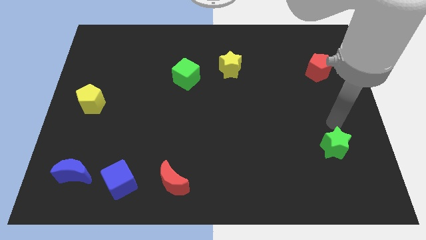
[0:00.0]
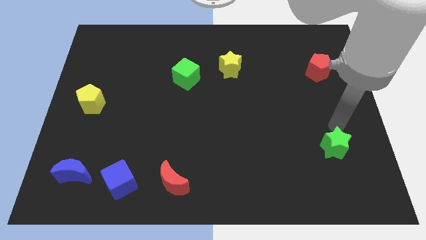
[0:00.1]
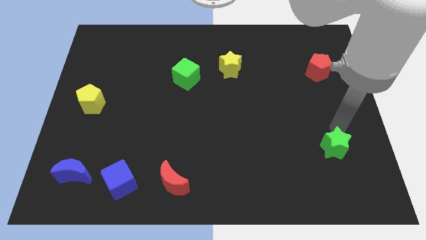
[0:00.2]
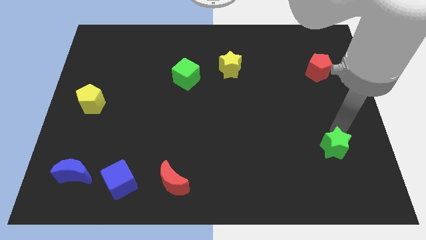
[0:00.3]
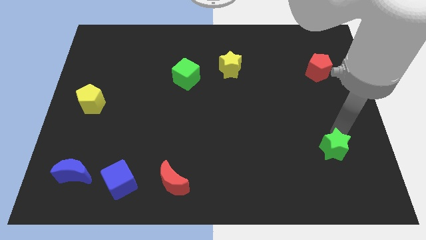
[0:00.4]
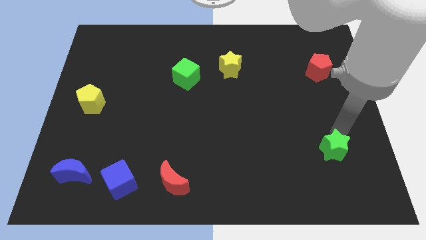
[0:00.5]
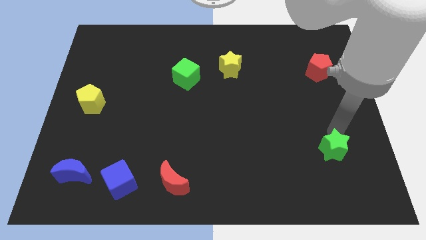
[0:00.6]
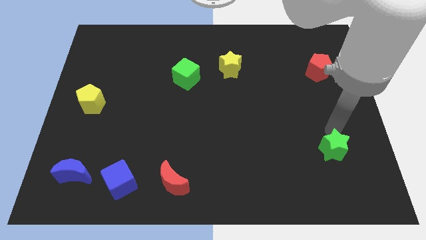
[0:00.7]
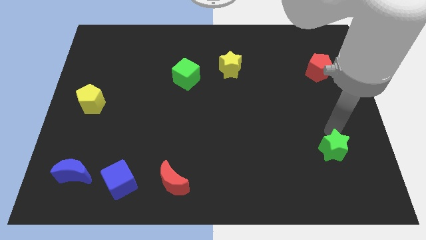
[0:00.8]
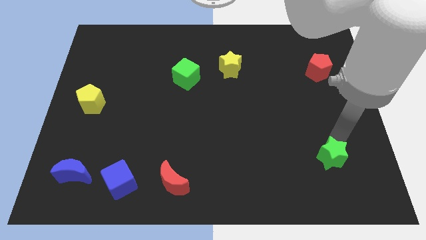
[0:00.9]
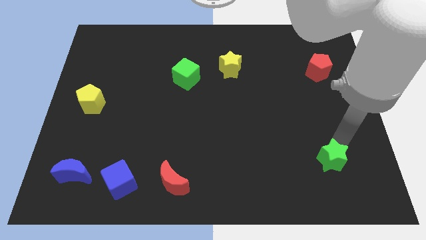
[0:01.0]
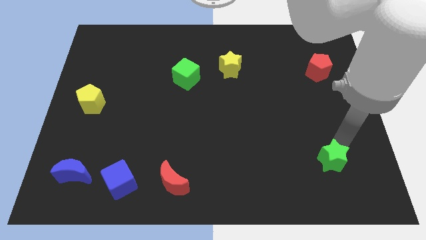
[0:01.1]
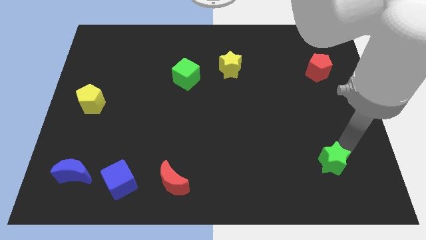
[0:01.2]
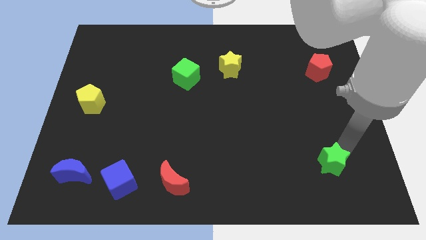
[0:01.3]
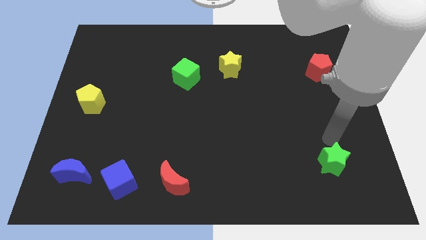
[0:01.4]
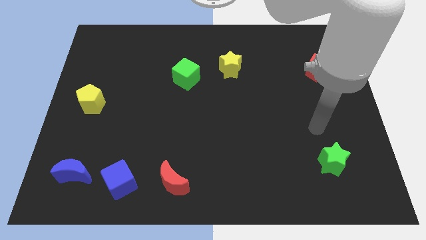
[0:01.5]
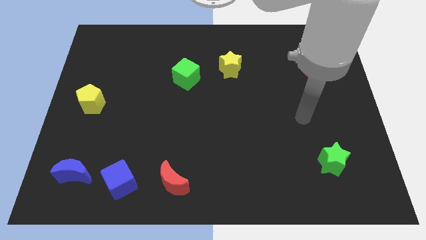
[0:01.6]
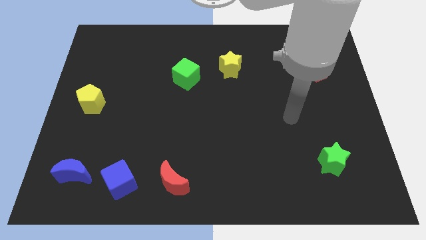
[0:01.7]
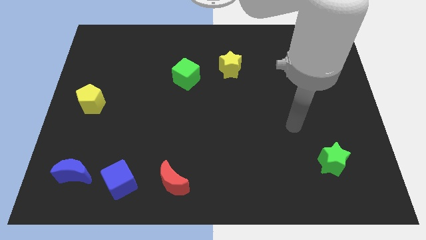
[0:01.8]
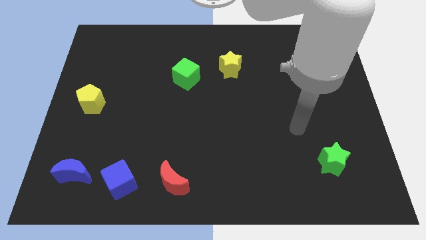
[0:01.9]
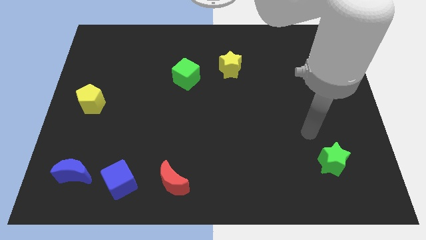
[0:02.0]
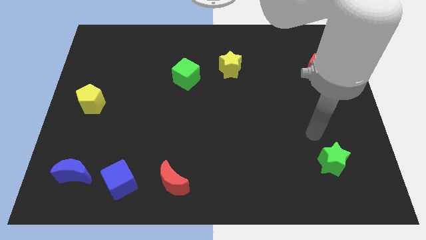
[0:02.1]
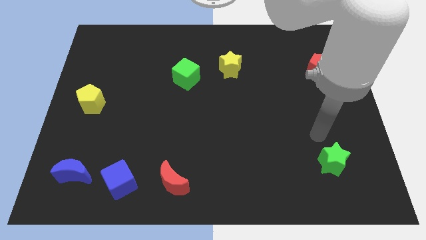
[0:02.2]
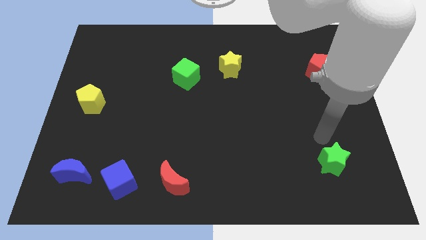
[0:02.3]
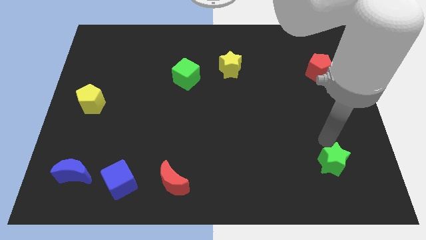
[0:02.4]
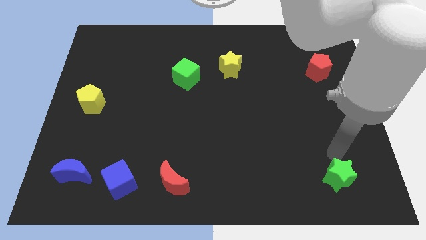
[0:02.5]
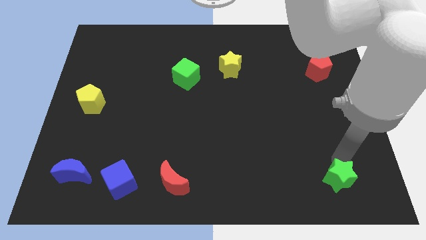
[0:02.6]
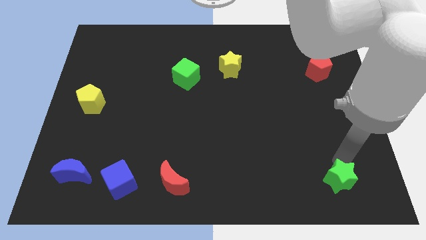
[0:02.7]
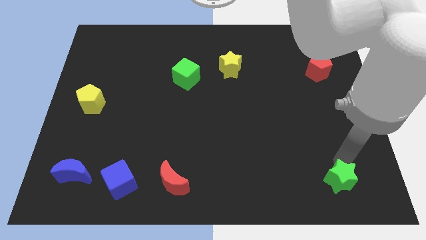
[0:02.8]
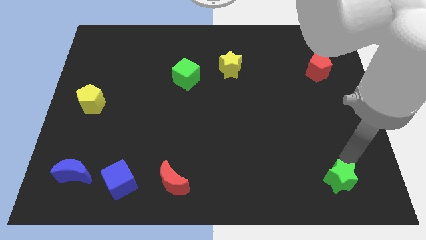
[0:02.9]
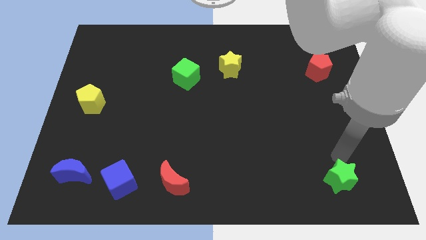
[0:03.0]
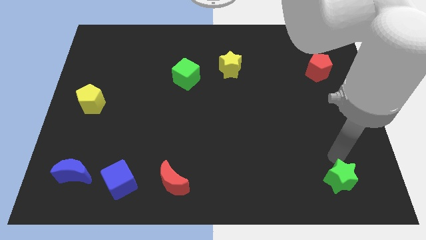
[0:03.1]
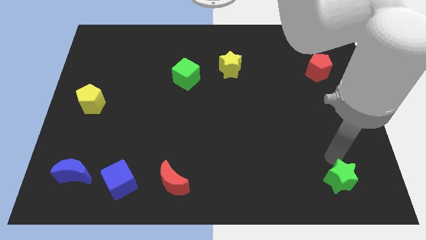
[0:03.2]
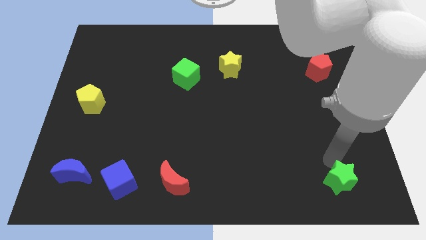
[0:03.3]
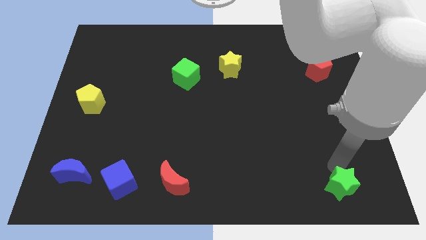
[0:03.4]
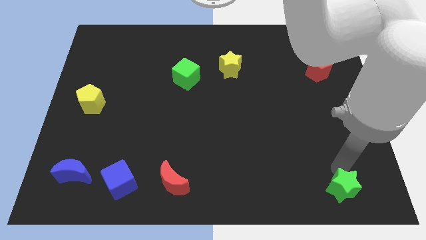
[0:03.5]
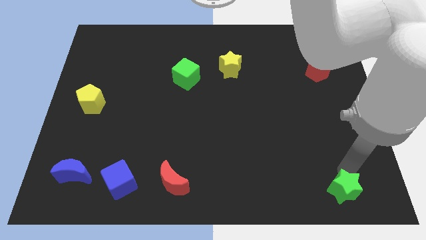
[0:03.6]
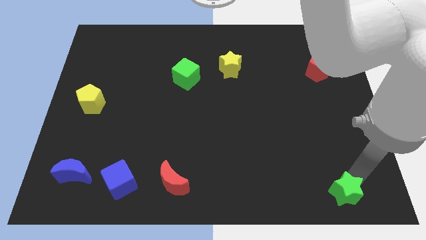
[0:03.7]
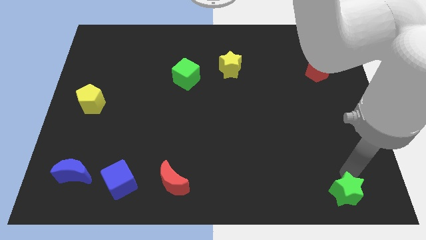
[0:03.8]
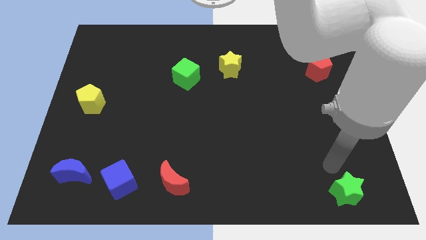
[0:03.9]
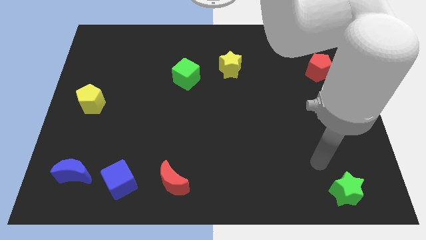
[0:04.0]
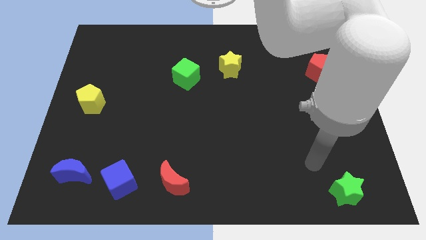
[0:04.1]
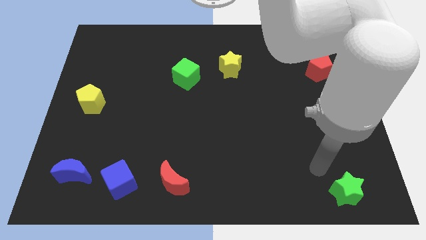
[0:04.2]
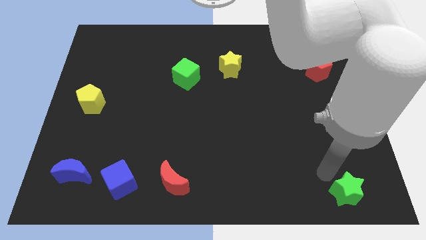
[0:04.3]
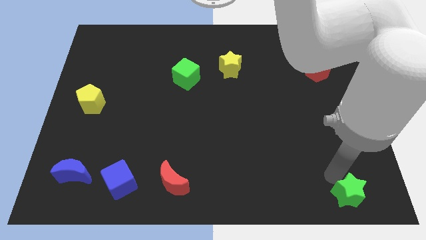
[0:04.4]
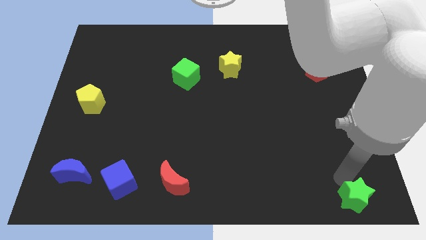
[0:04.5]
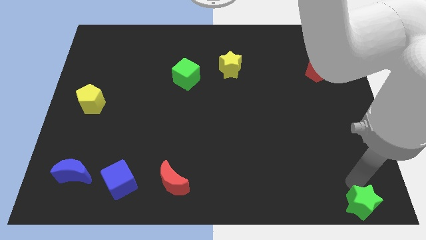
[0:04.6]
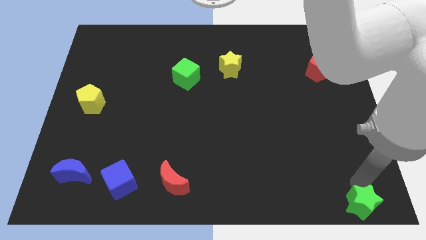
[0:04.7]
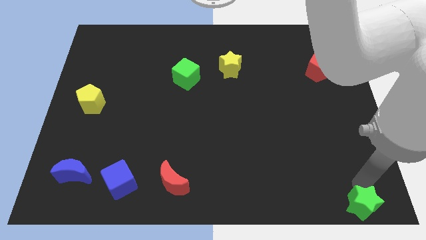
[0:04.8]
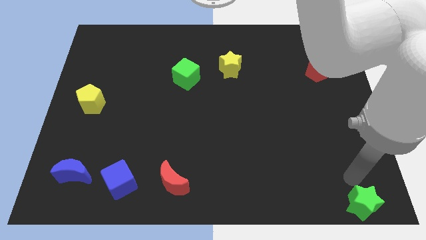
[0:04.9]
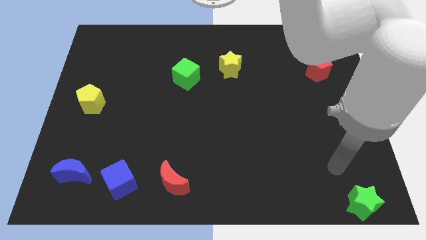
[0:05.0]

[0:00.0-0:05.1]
push the green star to the bottom right corner

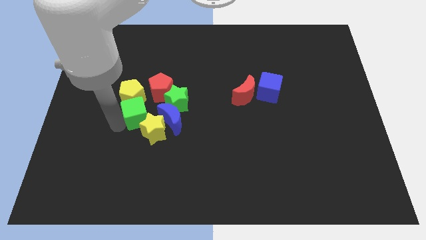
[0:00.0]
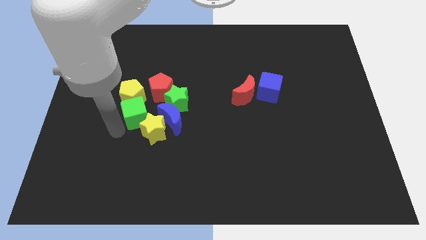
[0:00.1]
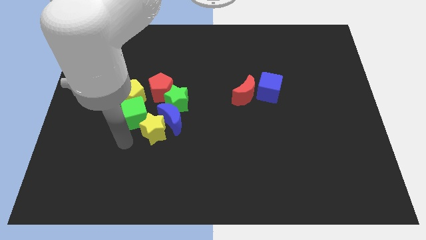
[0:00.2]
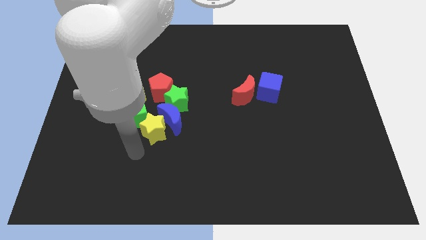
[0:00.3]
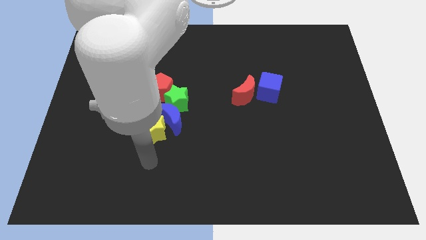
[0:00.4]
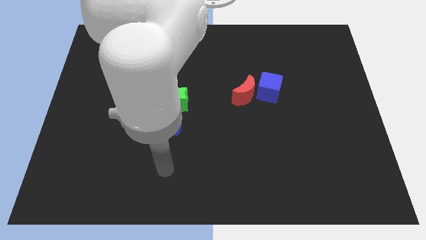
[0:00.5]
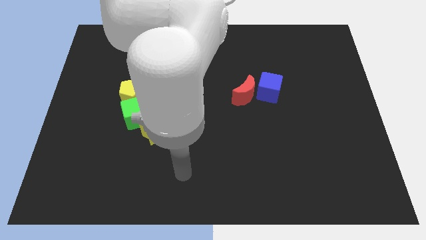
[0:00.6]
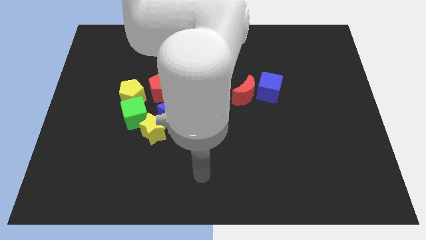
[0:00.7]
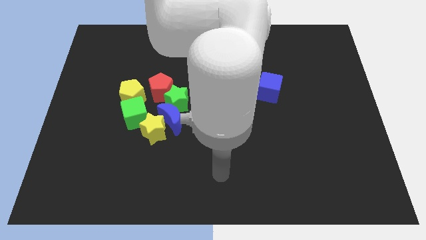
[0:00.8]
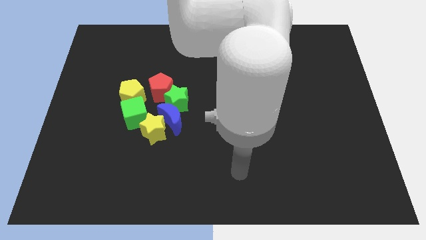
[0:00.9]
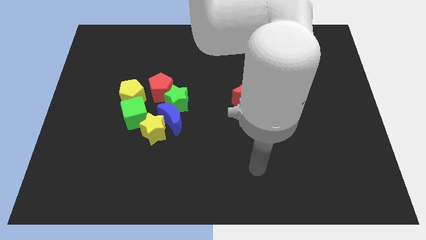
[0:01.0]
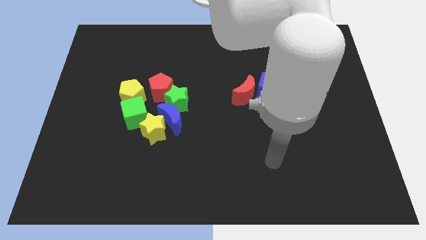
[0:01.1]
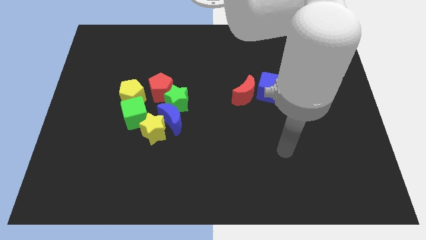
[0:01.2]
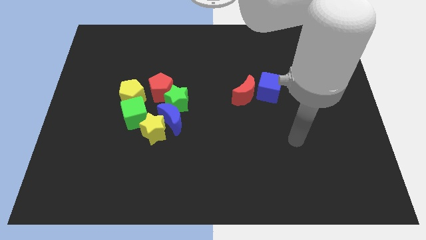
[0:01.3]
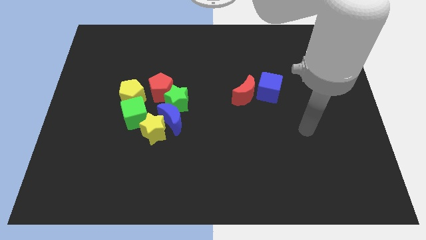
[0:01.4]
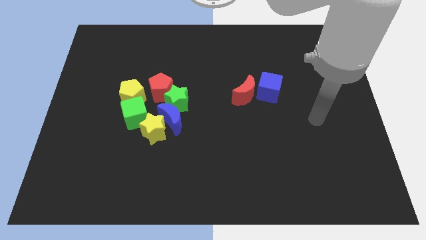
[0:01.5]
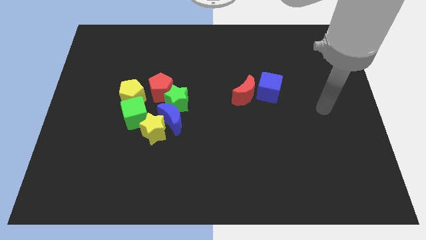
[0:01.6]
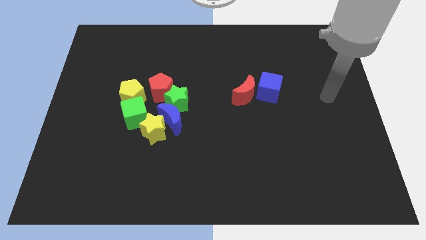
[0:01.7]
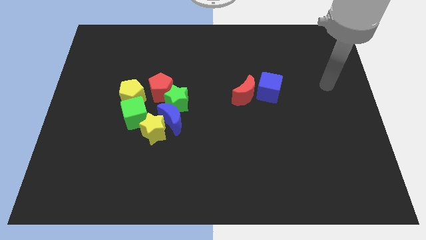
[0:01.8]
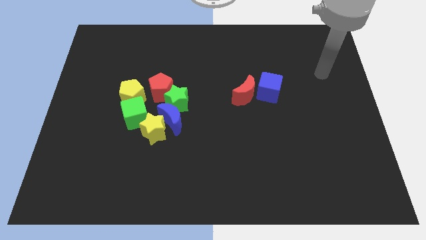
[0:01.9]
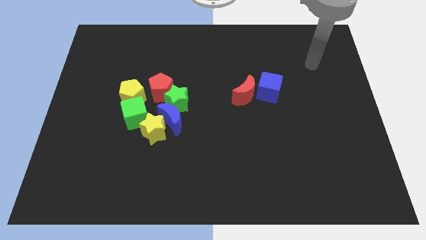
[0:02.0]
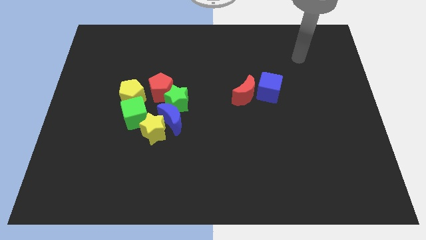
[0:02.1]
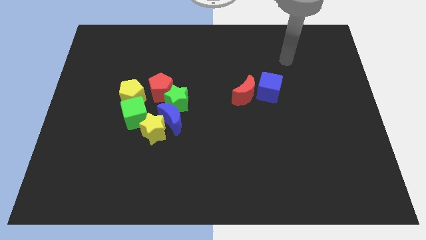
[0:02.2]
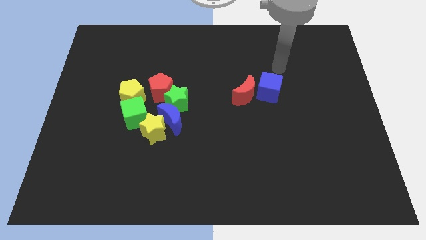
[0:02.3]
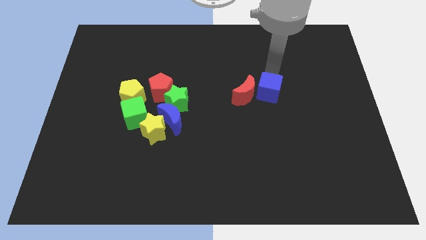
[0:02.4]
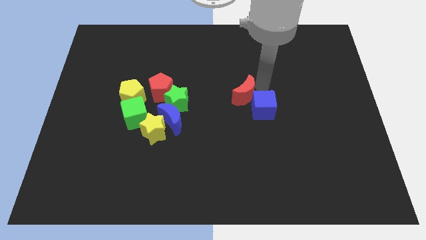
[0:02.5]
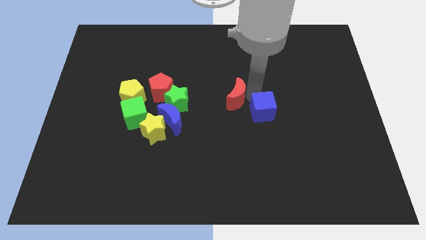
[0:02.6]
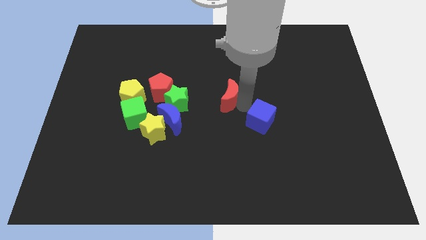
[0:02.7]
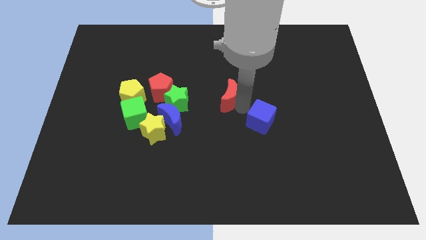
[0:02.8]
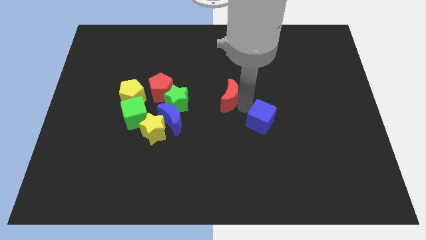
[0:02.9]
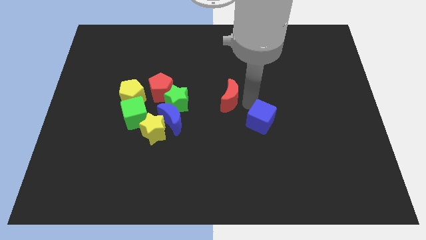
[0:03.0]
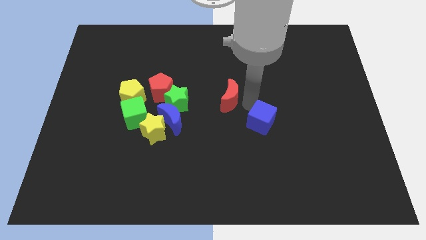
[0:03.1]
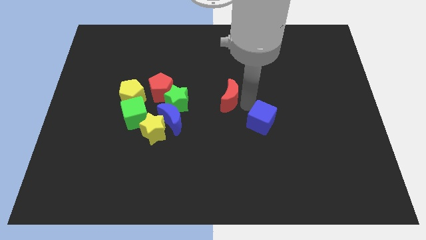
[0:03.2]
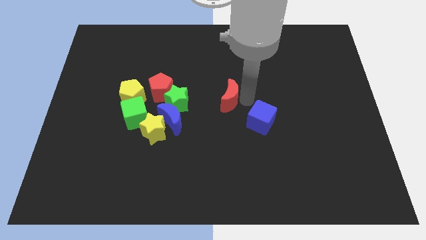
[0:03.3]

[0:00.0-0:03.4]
separate the red moon and blue cube

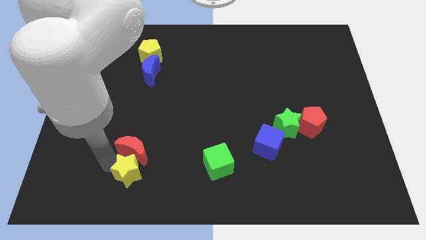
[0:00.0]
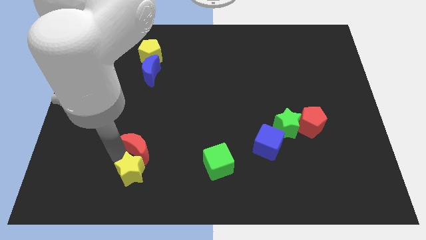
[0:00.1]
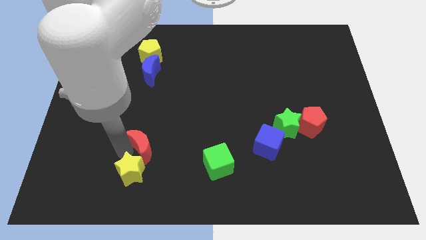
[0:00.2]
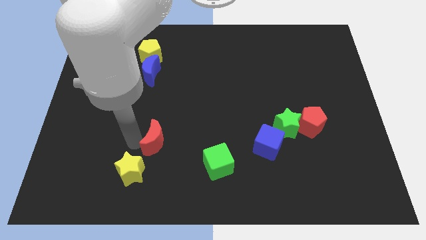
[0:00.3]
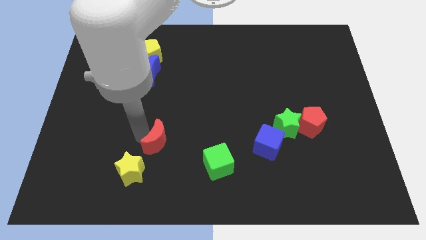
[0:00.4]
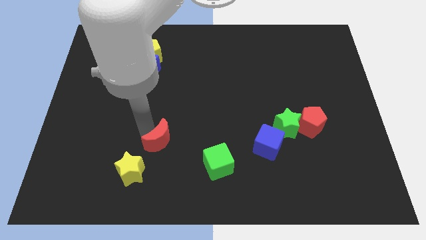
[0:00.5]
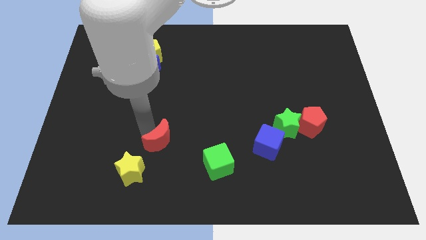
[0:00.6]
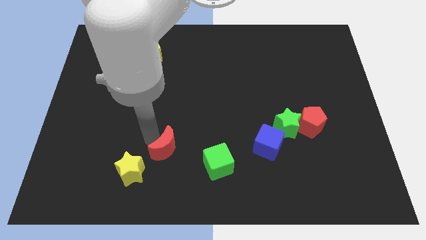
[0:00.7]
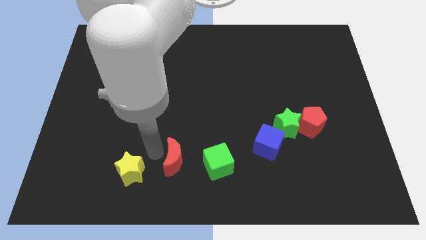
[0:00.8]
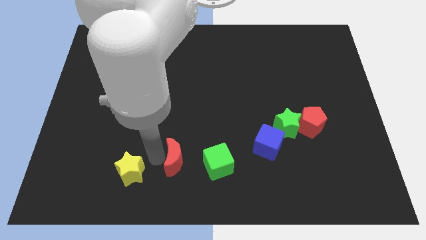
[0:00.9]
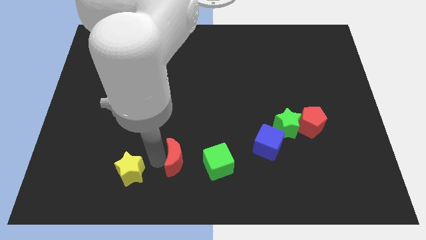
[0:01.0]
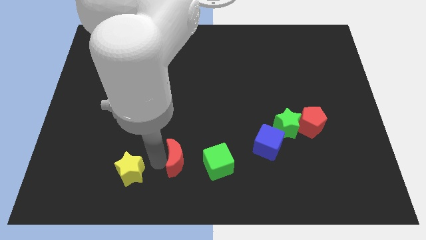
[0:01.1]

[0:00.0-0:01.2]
separate the red moon and the yellow star
